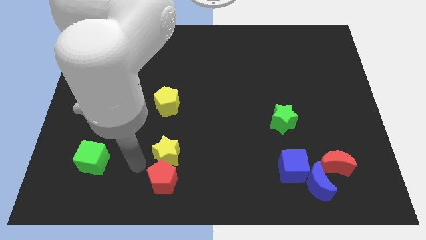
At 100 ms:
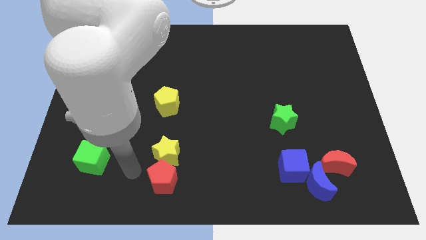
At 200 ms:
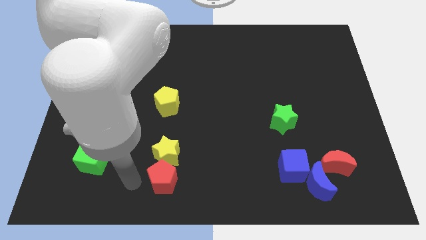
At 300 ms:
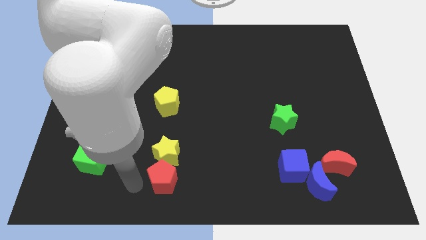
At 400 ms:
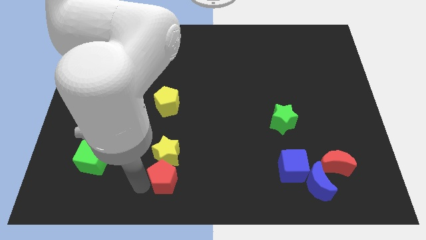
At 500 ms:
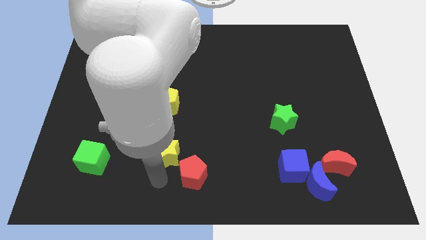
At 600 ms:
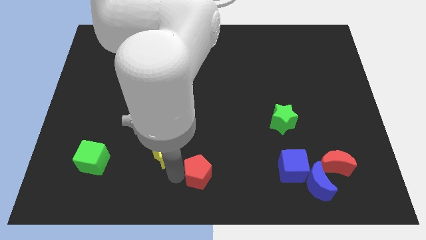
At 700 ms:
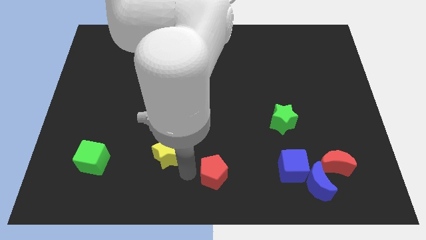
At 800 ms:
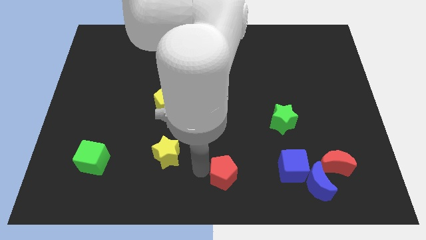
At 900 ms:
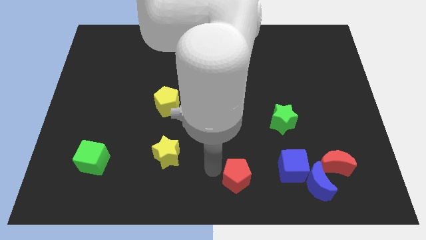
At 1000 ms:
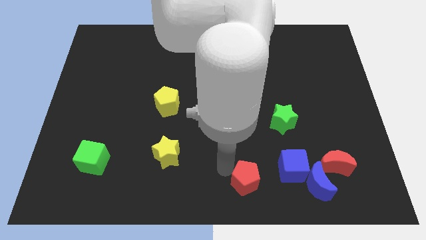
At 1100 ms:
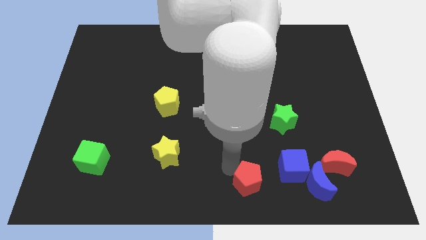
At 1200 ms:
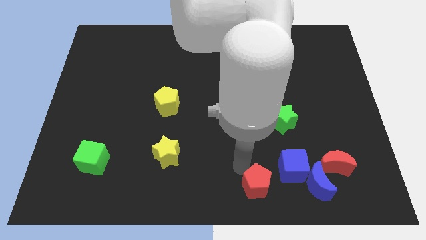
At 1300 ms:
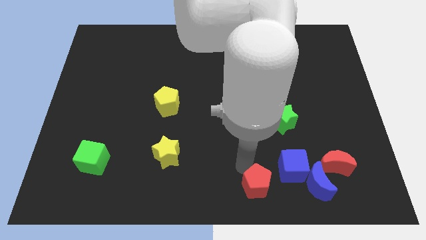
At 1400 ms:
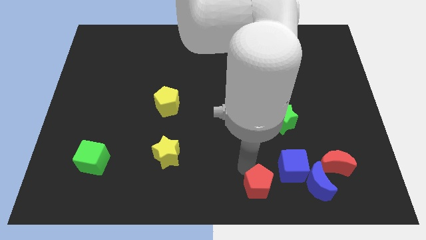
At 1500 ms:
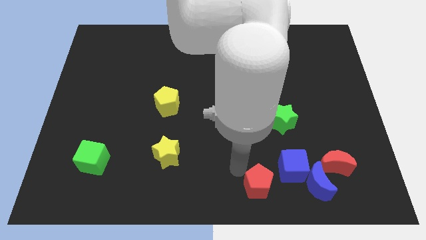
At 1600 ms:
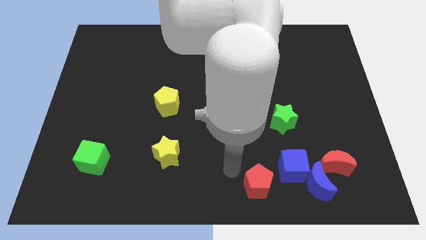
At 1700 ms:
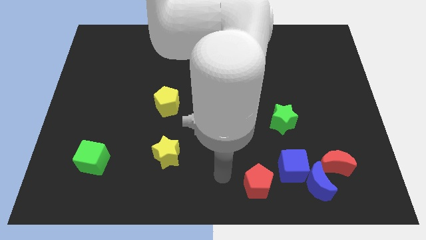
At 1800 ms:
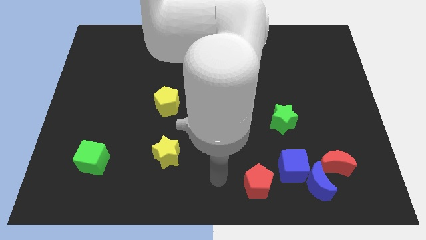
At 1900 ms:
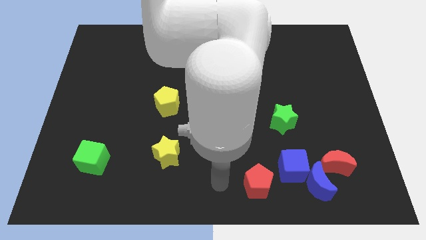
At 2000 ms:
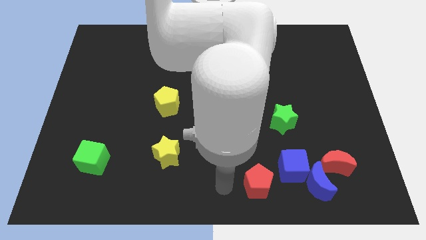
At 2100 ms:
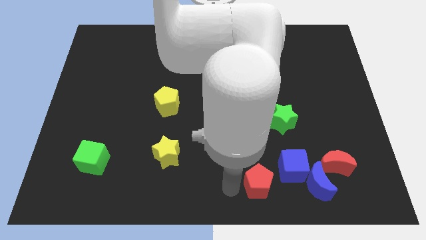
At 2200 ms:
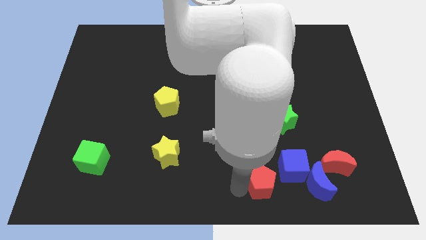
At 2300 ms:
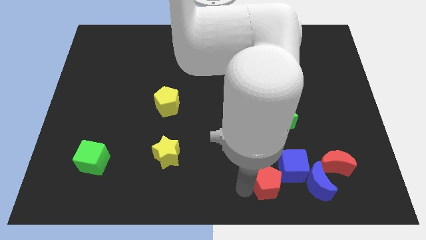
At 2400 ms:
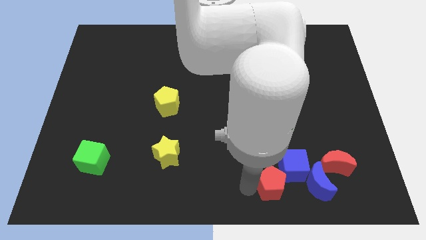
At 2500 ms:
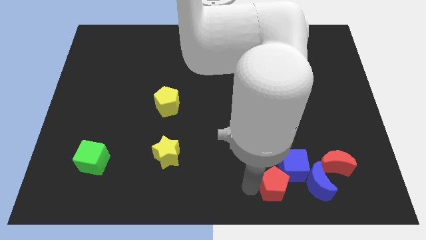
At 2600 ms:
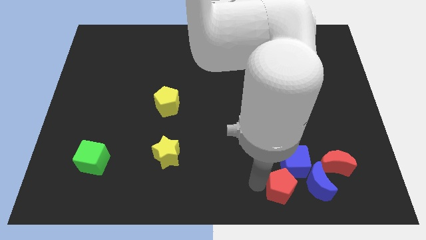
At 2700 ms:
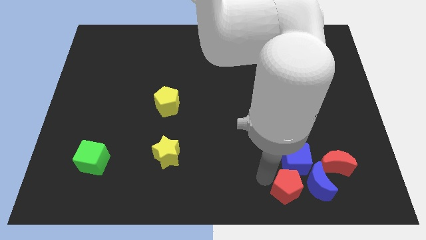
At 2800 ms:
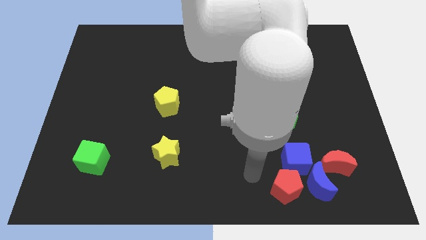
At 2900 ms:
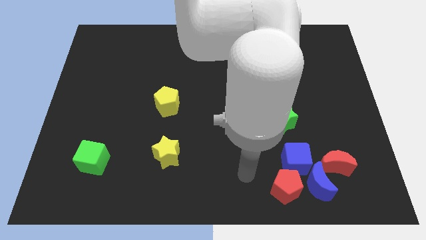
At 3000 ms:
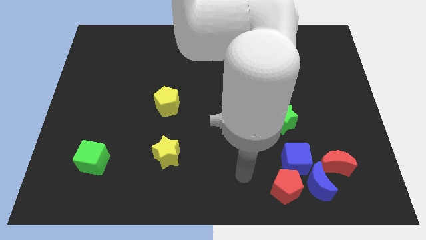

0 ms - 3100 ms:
separate the red pentagon from the yellow star

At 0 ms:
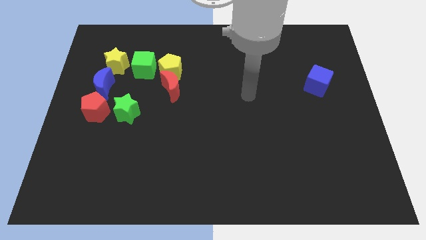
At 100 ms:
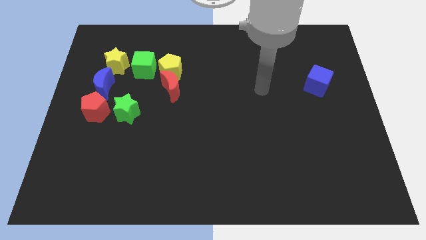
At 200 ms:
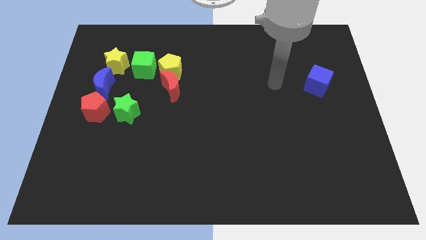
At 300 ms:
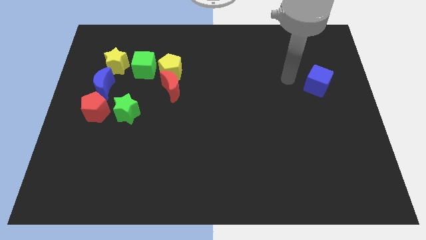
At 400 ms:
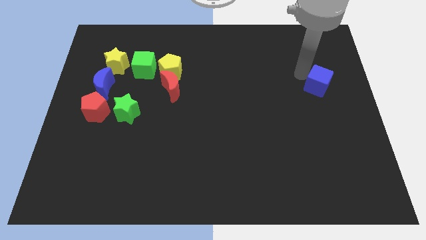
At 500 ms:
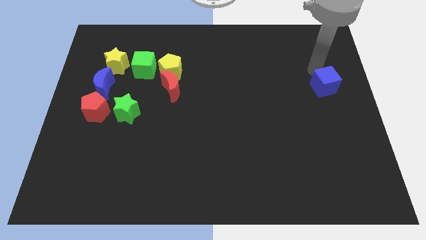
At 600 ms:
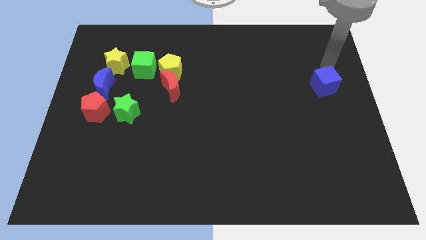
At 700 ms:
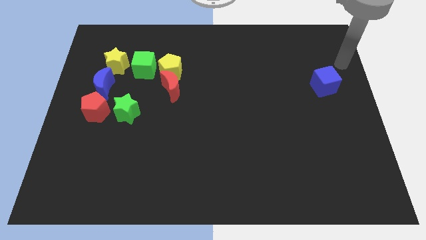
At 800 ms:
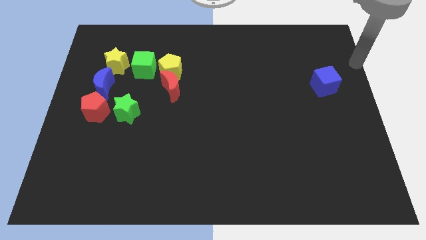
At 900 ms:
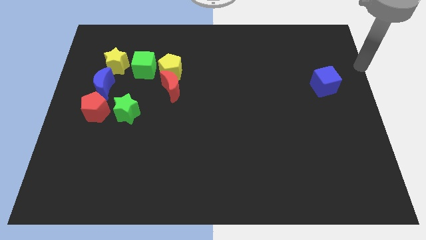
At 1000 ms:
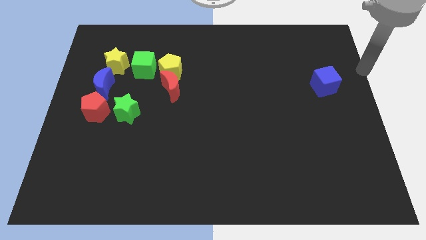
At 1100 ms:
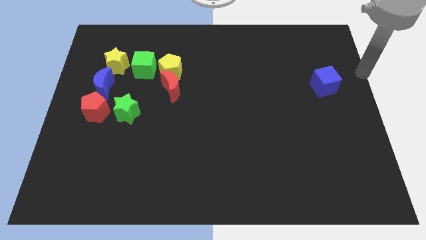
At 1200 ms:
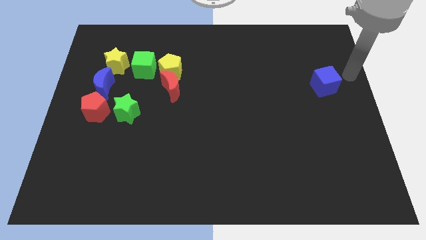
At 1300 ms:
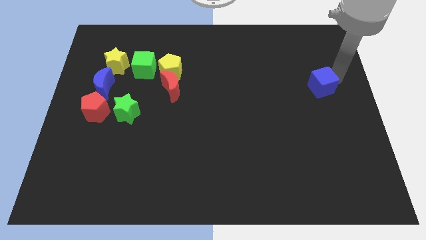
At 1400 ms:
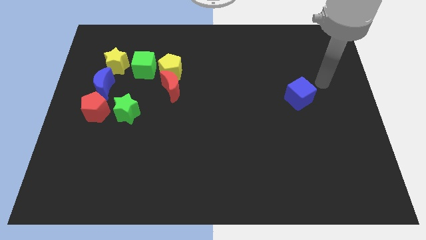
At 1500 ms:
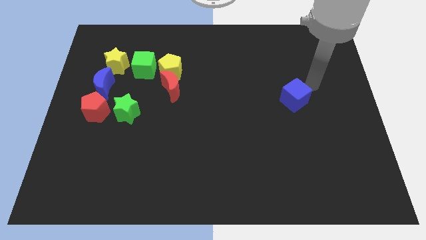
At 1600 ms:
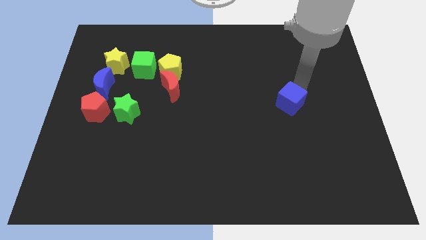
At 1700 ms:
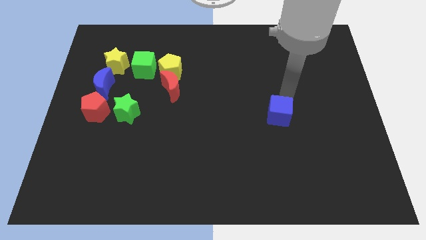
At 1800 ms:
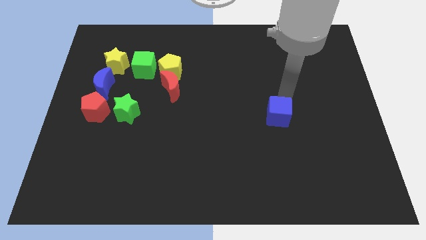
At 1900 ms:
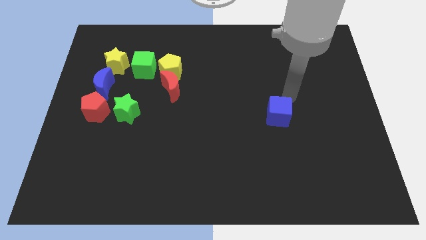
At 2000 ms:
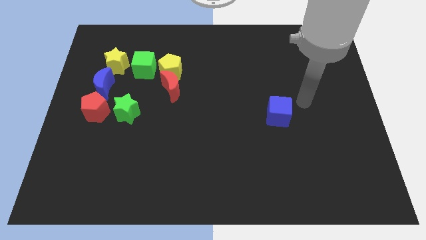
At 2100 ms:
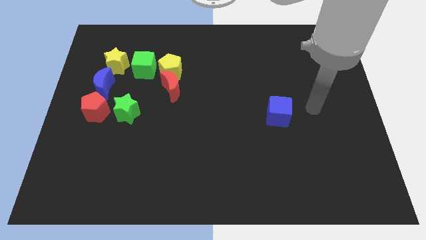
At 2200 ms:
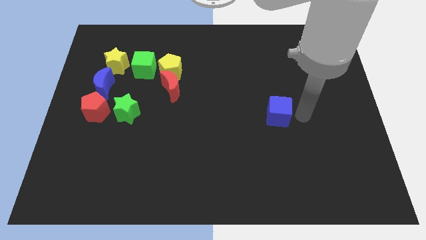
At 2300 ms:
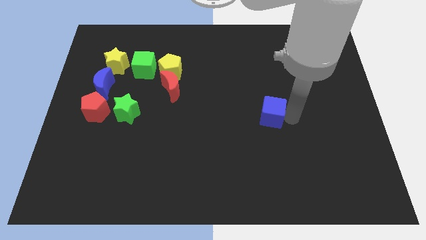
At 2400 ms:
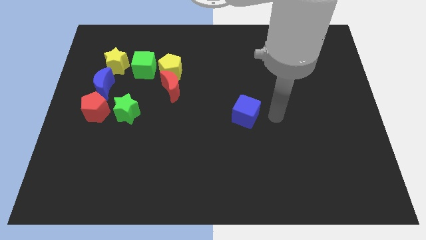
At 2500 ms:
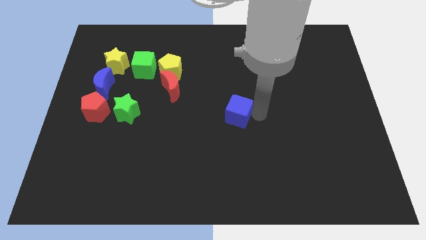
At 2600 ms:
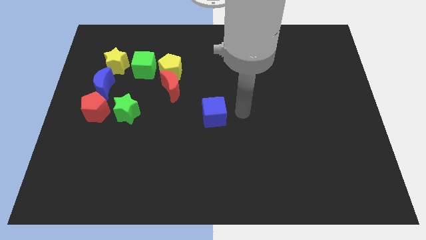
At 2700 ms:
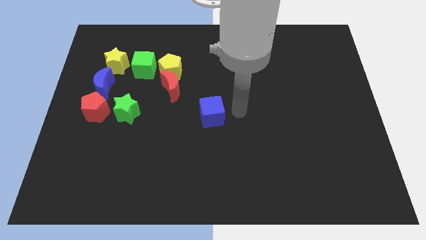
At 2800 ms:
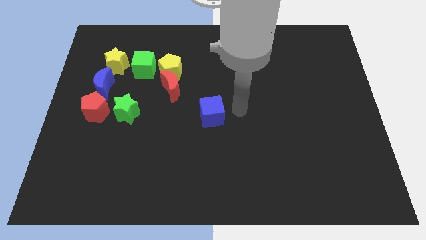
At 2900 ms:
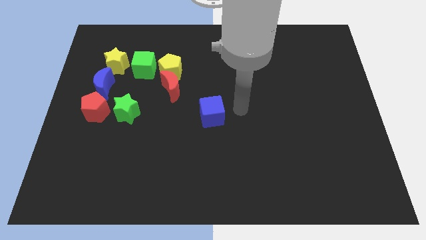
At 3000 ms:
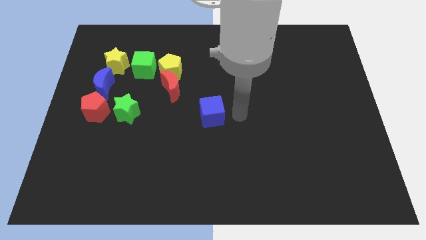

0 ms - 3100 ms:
move the blue cube diagonally to the red moon

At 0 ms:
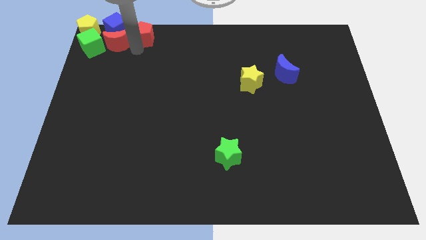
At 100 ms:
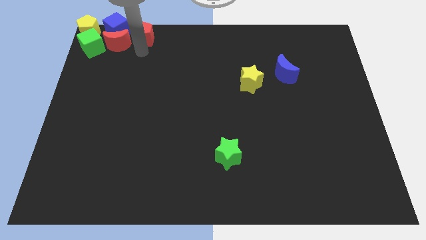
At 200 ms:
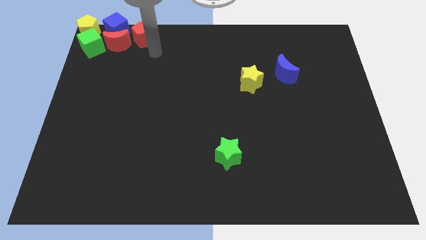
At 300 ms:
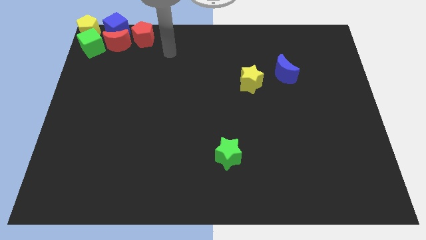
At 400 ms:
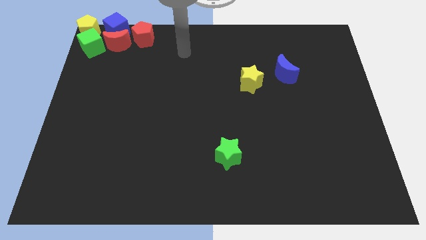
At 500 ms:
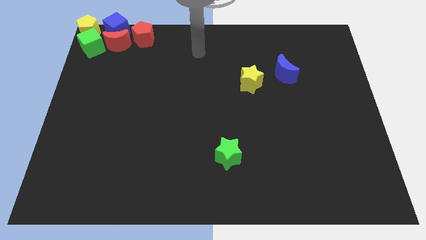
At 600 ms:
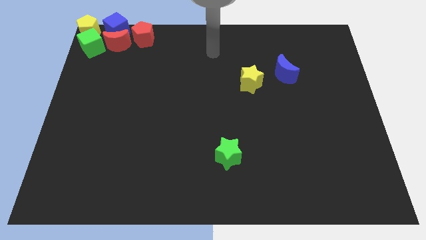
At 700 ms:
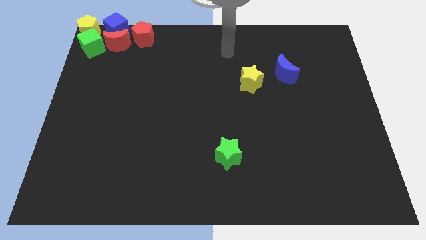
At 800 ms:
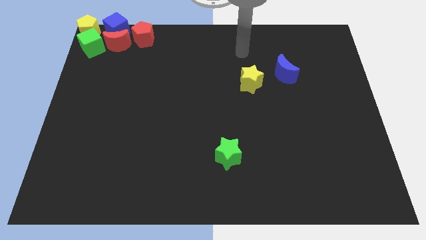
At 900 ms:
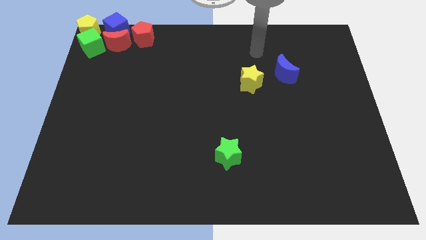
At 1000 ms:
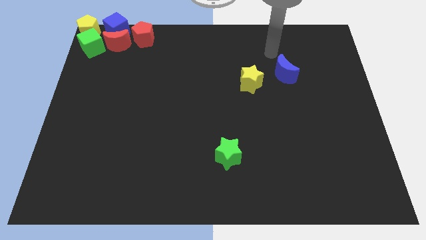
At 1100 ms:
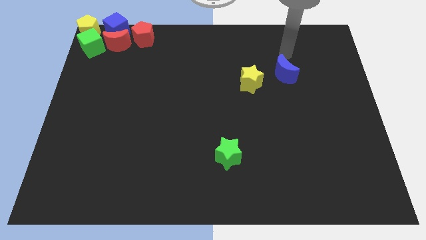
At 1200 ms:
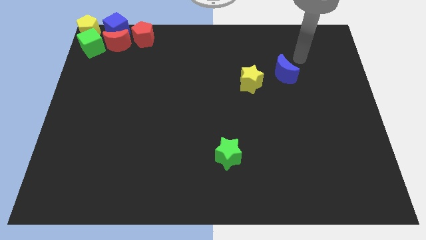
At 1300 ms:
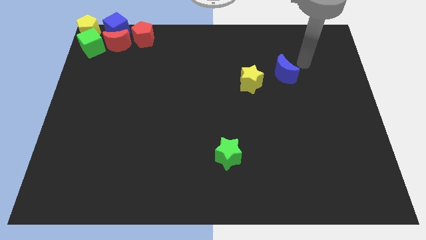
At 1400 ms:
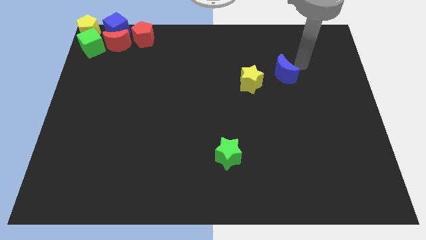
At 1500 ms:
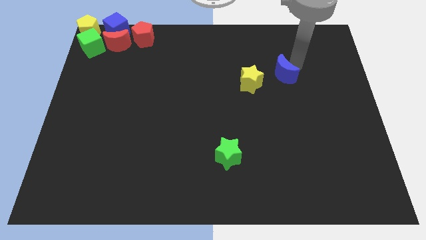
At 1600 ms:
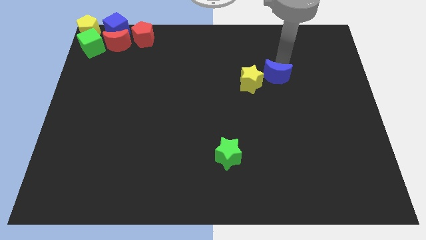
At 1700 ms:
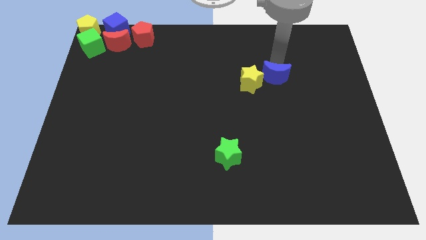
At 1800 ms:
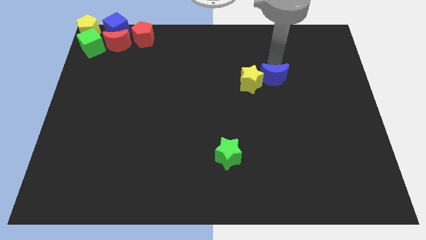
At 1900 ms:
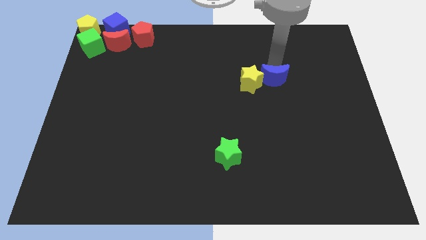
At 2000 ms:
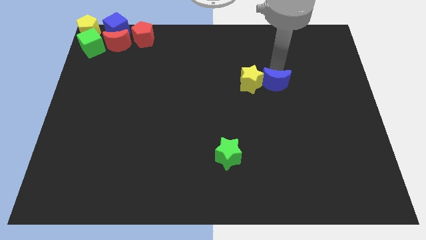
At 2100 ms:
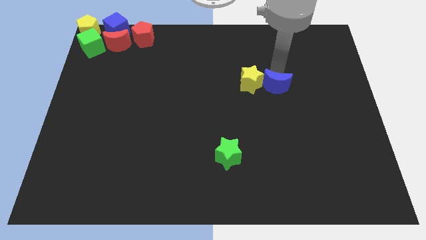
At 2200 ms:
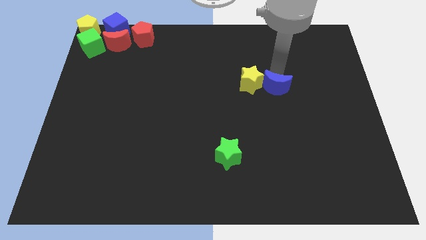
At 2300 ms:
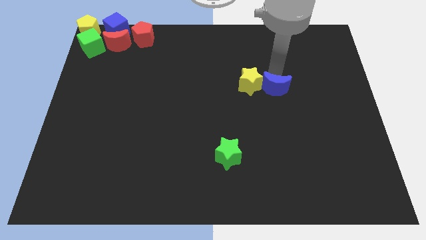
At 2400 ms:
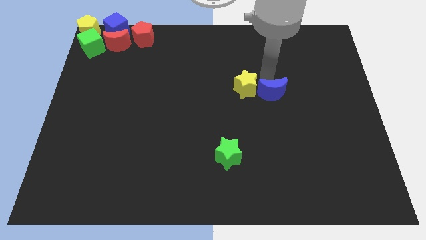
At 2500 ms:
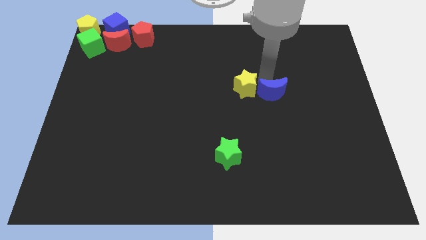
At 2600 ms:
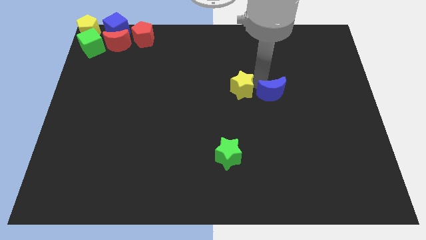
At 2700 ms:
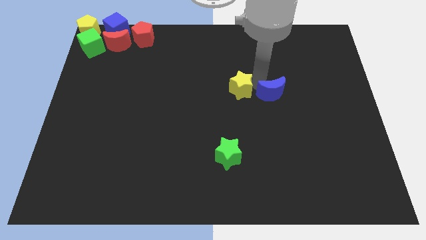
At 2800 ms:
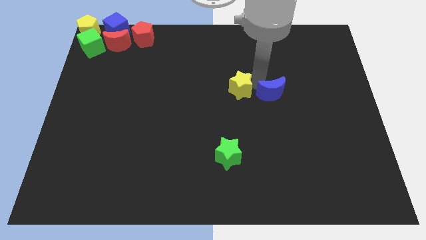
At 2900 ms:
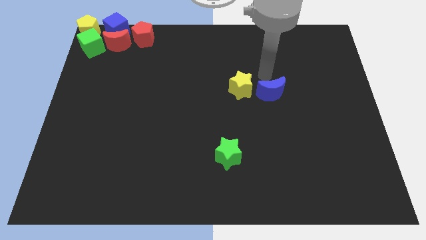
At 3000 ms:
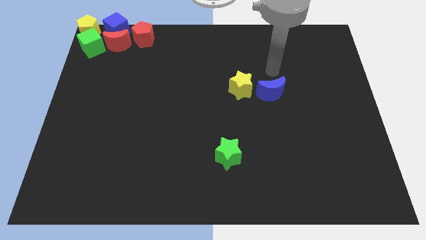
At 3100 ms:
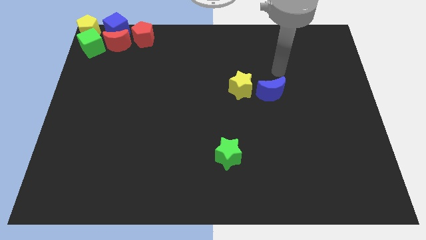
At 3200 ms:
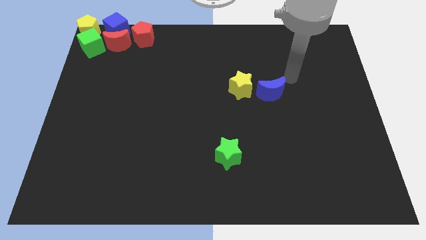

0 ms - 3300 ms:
put the blue crescent to the right side of the yellow star
